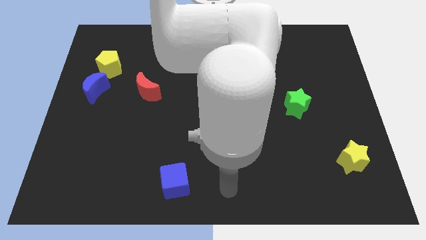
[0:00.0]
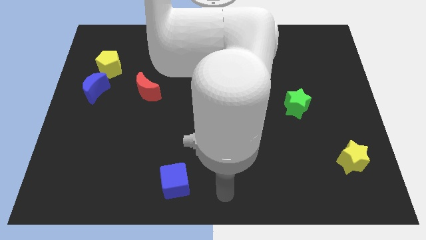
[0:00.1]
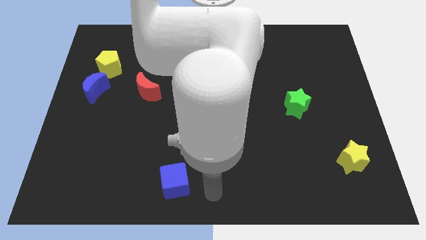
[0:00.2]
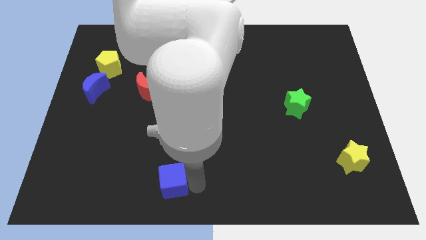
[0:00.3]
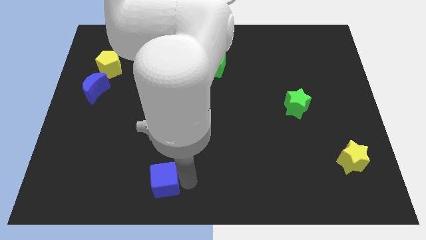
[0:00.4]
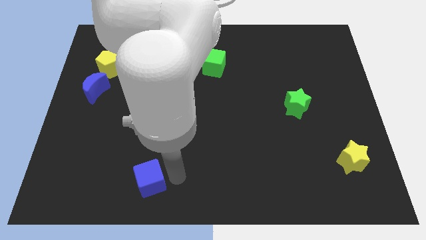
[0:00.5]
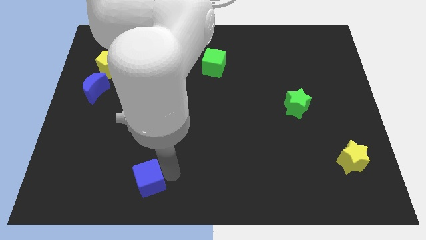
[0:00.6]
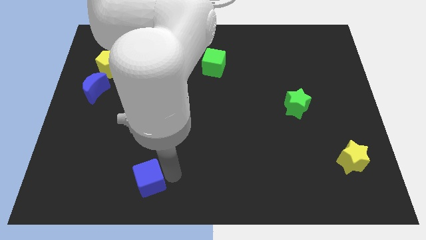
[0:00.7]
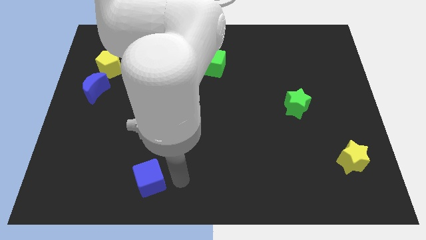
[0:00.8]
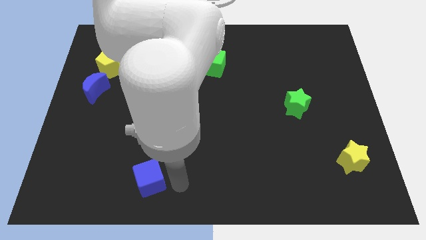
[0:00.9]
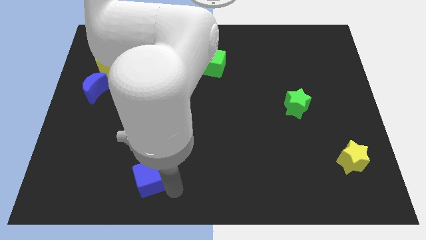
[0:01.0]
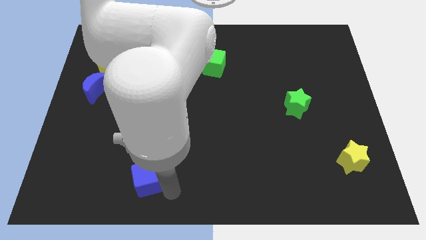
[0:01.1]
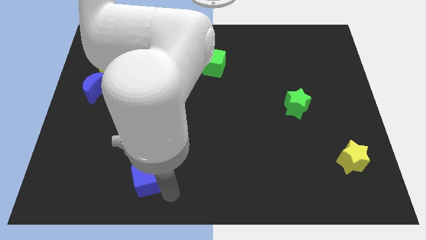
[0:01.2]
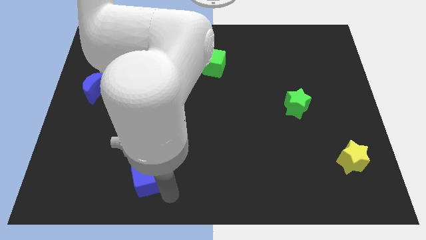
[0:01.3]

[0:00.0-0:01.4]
move blue cube towards its left

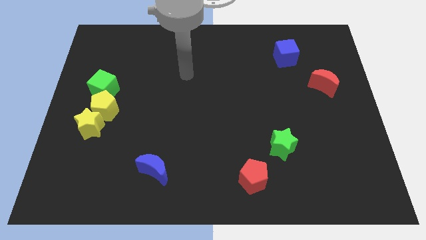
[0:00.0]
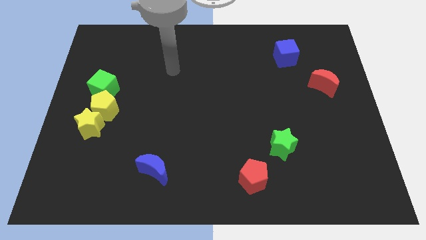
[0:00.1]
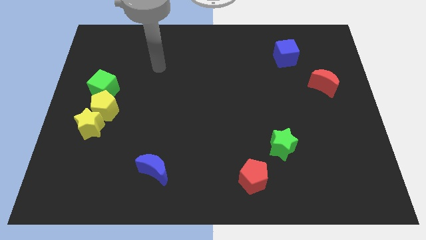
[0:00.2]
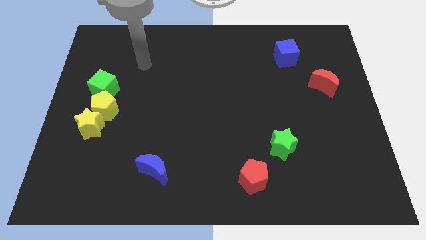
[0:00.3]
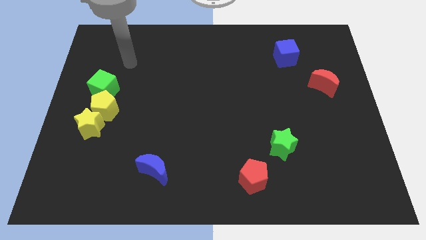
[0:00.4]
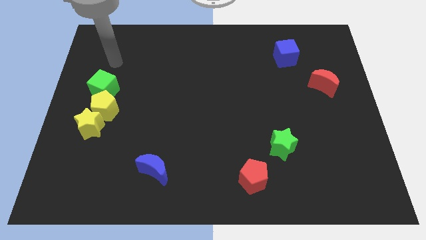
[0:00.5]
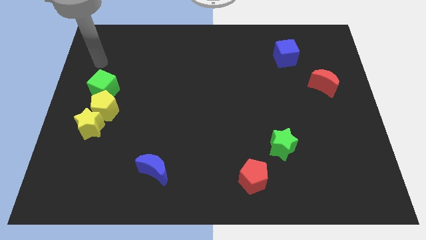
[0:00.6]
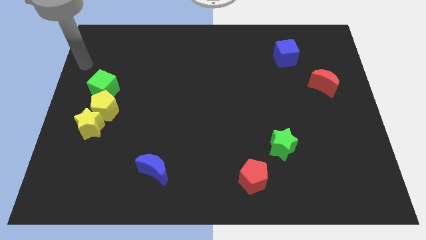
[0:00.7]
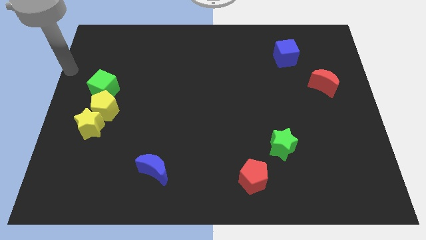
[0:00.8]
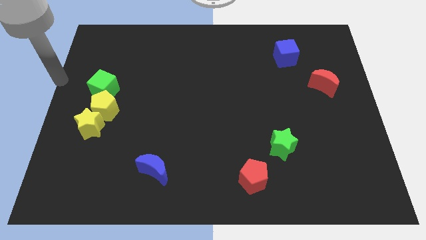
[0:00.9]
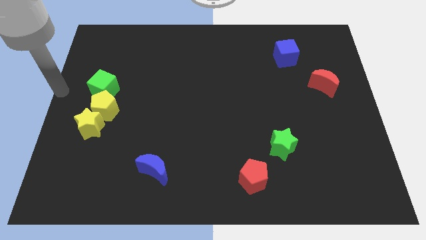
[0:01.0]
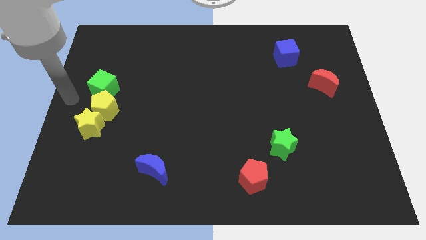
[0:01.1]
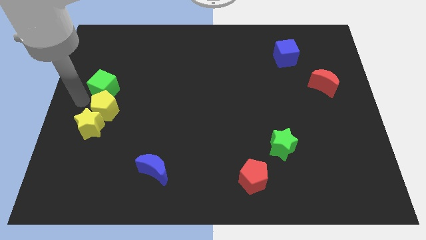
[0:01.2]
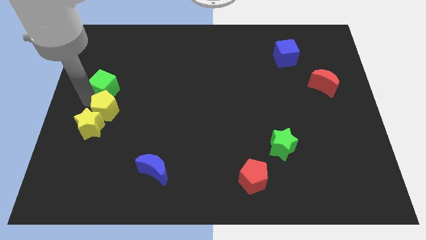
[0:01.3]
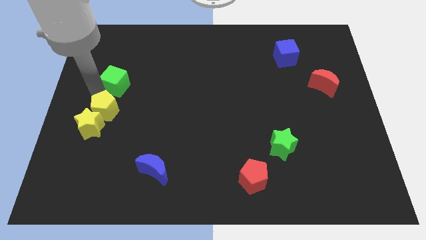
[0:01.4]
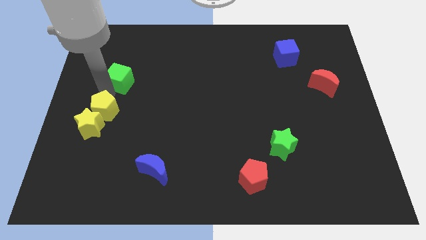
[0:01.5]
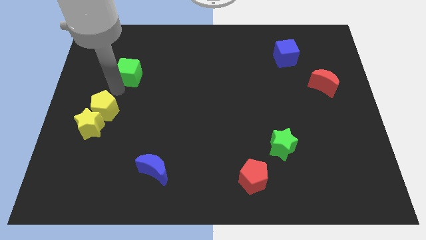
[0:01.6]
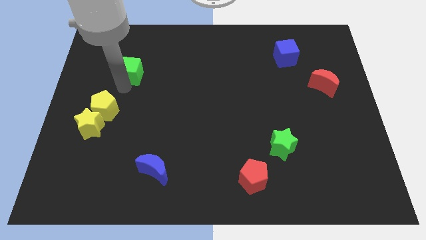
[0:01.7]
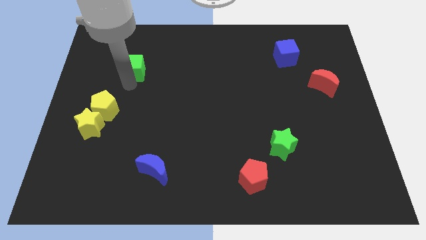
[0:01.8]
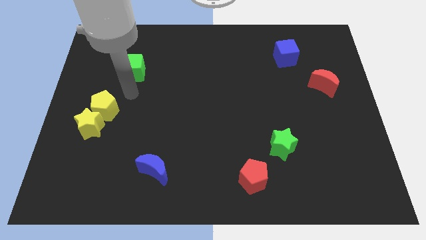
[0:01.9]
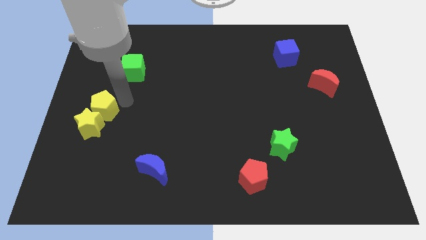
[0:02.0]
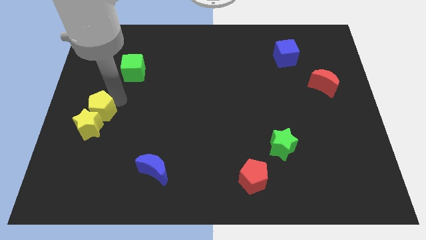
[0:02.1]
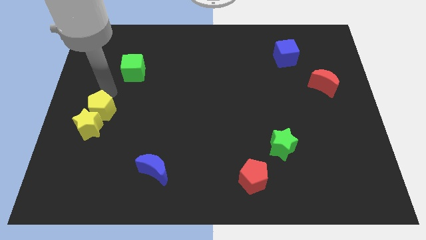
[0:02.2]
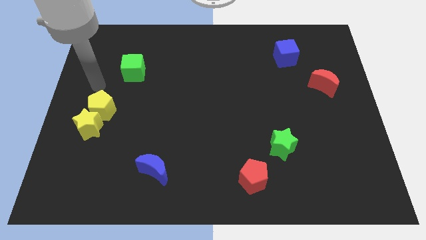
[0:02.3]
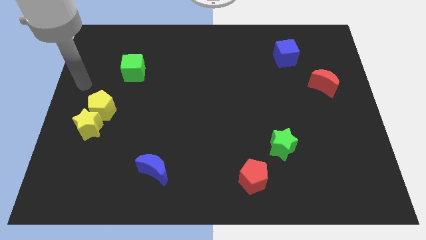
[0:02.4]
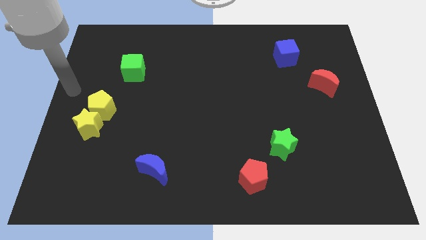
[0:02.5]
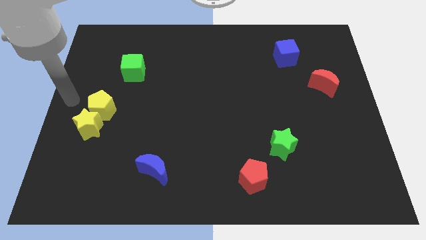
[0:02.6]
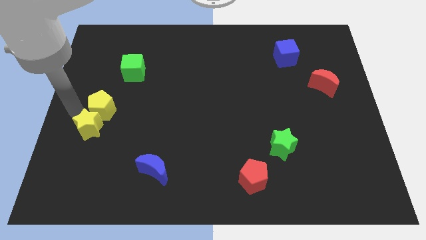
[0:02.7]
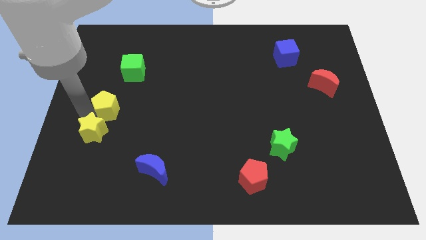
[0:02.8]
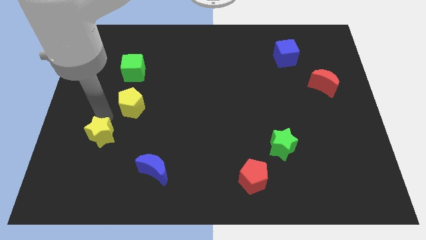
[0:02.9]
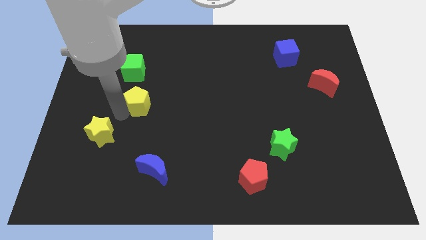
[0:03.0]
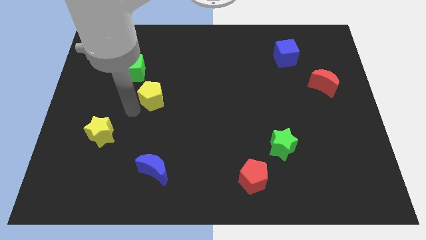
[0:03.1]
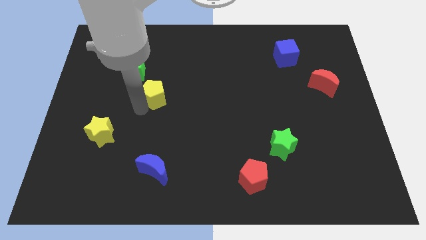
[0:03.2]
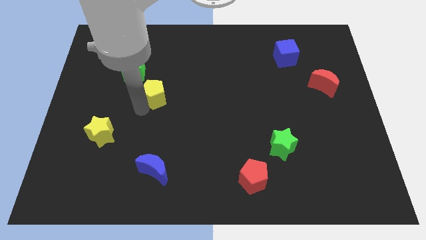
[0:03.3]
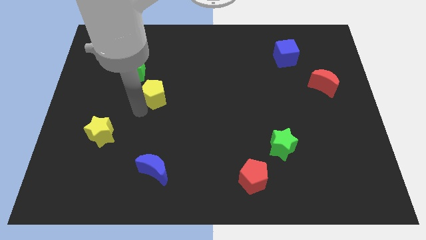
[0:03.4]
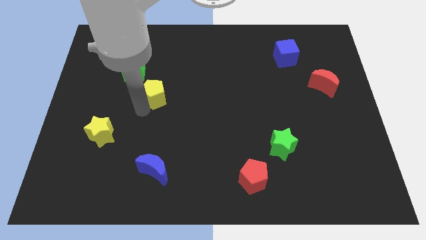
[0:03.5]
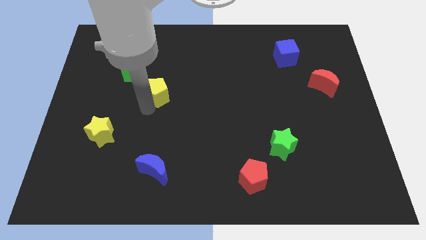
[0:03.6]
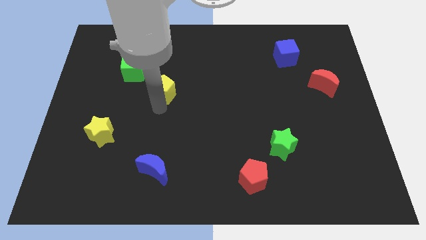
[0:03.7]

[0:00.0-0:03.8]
separate green cube from yellow pentagon

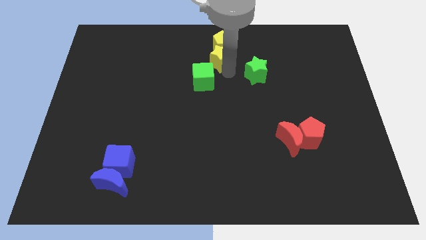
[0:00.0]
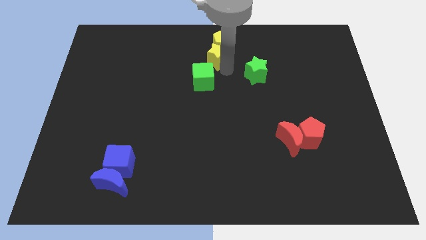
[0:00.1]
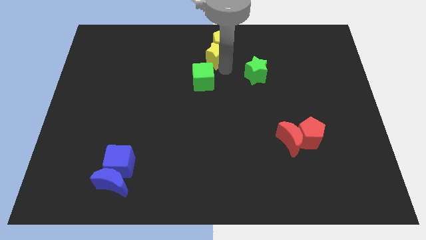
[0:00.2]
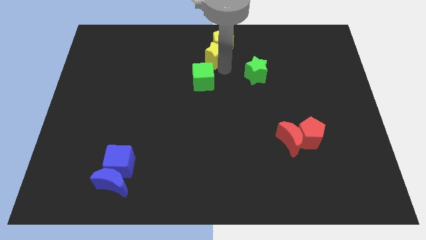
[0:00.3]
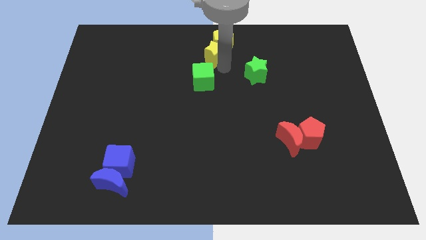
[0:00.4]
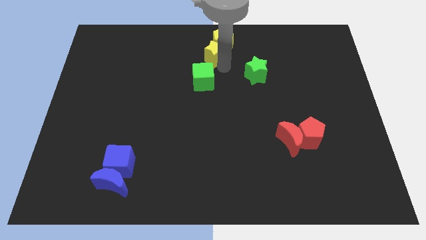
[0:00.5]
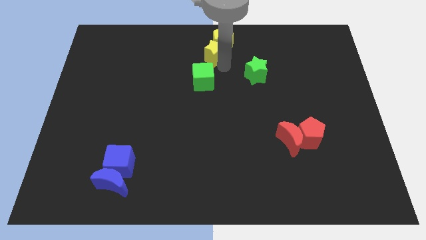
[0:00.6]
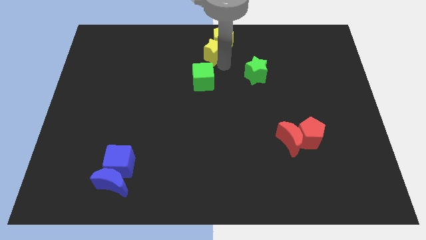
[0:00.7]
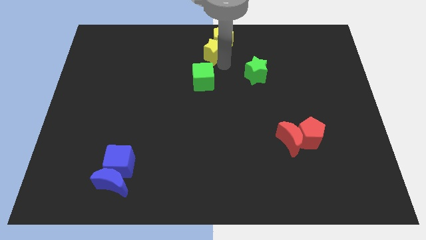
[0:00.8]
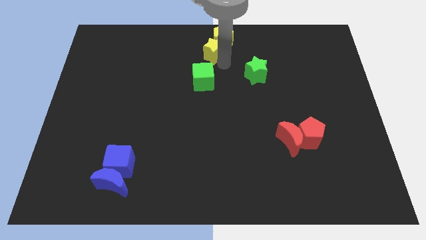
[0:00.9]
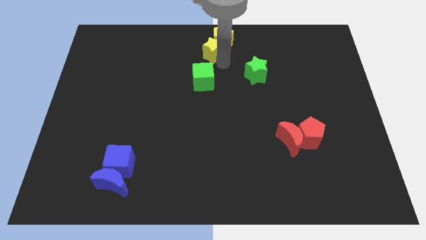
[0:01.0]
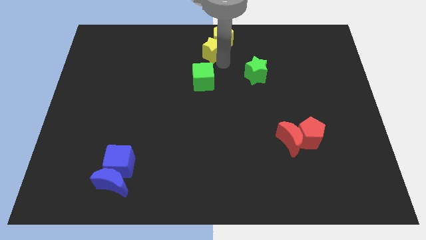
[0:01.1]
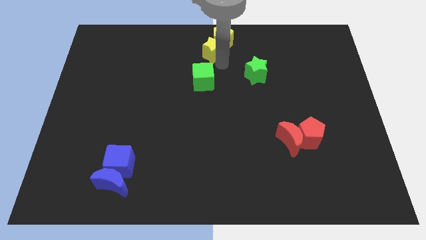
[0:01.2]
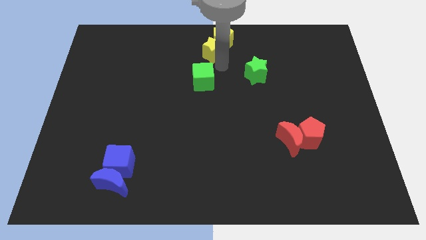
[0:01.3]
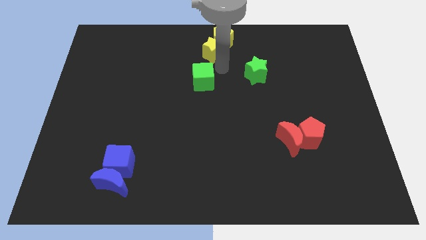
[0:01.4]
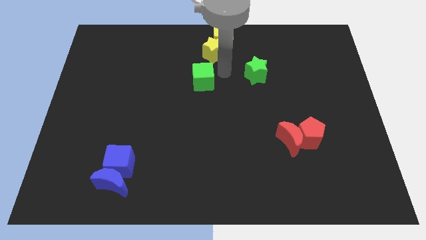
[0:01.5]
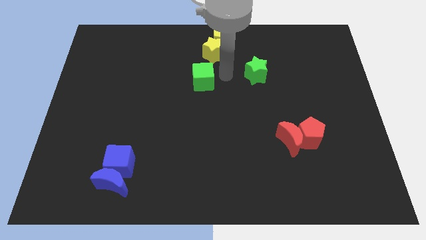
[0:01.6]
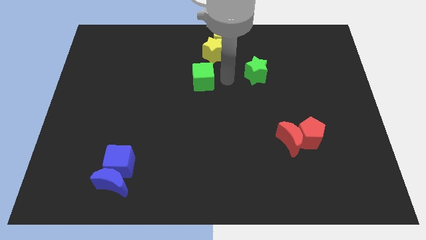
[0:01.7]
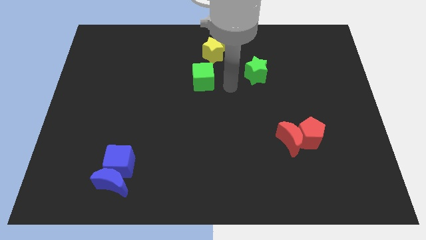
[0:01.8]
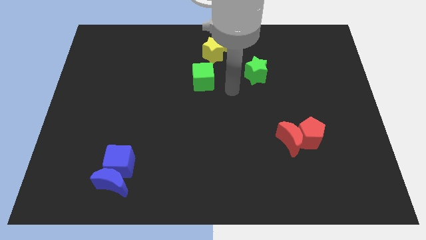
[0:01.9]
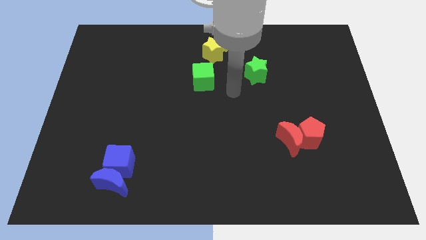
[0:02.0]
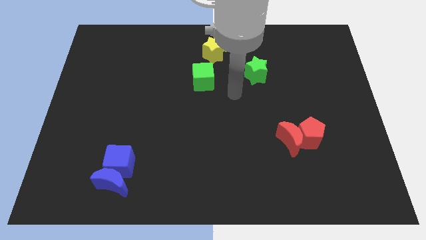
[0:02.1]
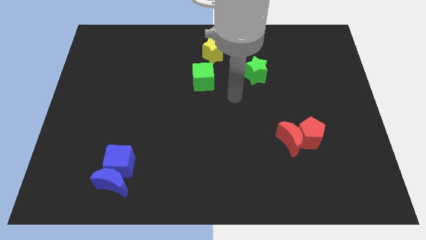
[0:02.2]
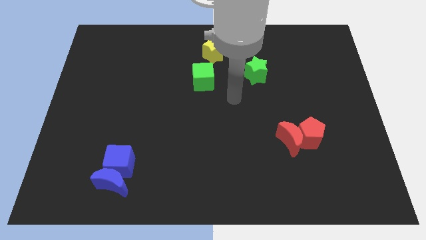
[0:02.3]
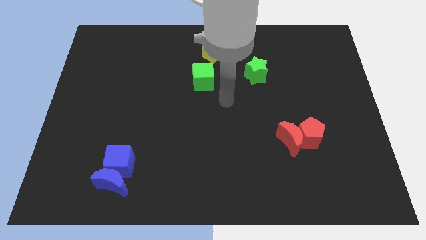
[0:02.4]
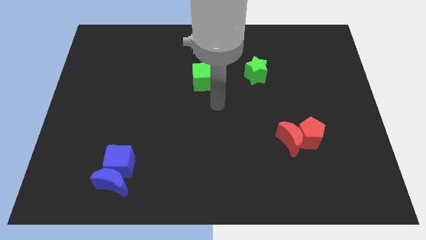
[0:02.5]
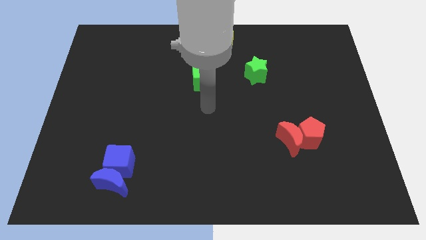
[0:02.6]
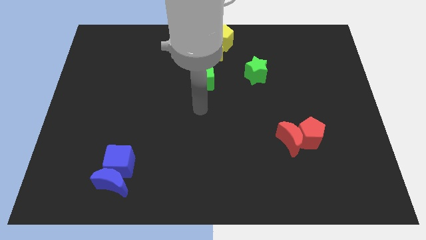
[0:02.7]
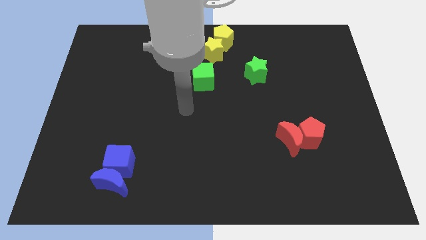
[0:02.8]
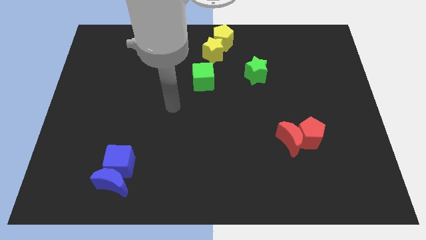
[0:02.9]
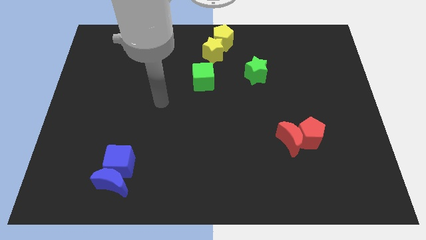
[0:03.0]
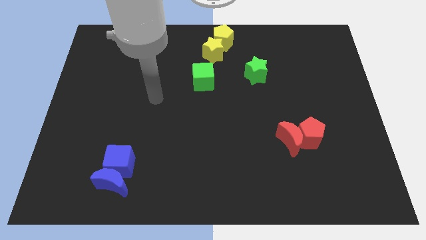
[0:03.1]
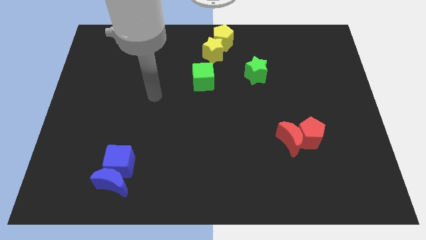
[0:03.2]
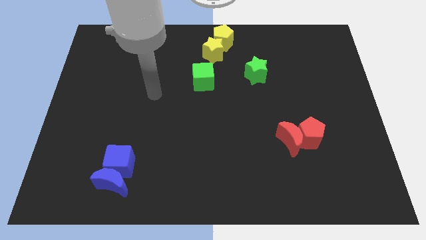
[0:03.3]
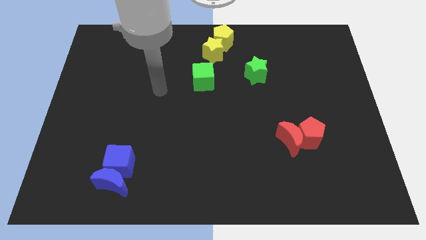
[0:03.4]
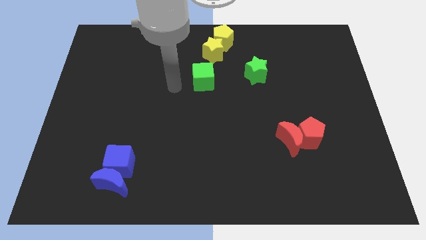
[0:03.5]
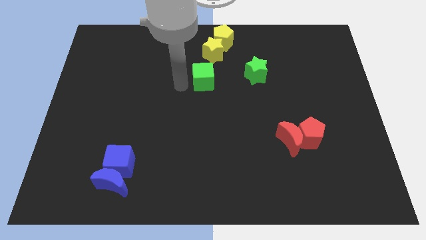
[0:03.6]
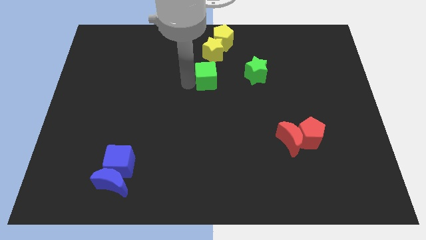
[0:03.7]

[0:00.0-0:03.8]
place the arm to the left of the green cube
